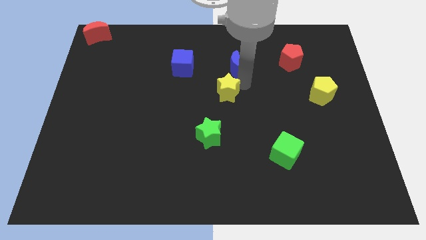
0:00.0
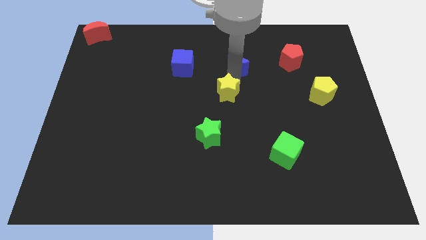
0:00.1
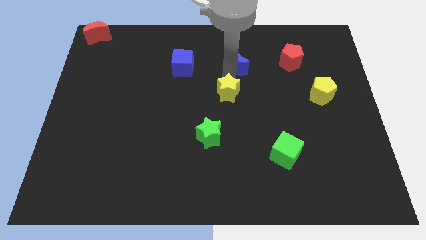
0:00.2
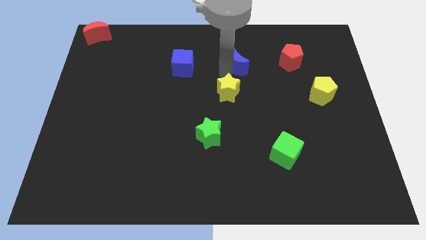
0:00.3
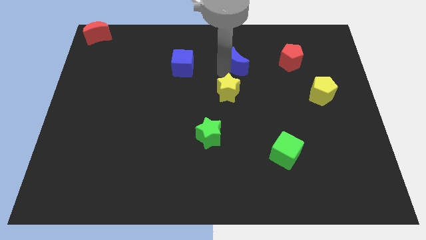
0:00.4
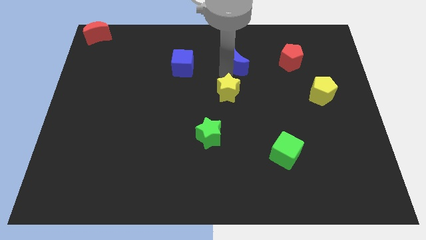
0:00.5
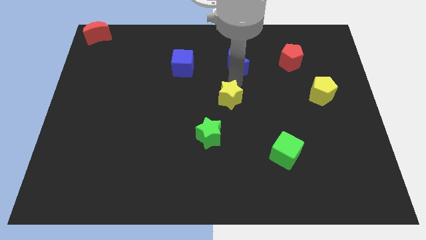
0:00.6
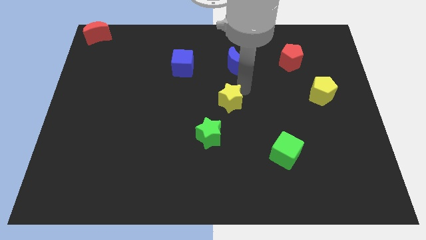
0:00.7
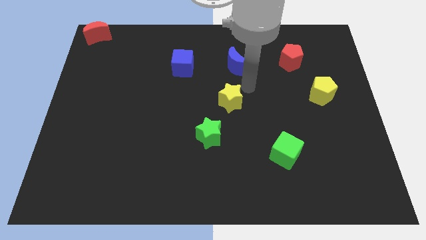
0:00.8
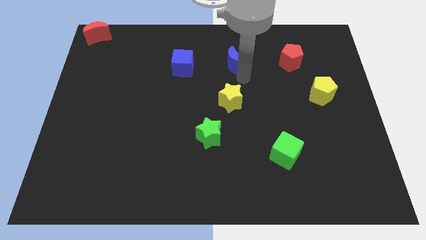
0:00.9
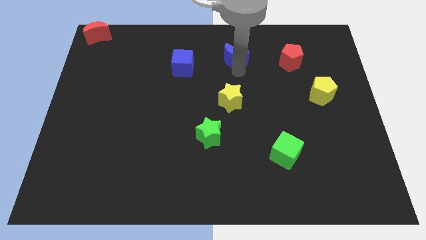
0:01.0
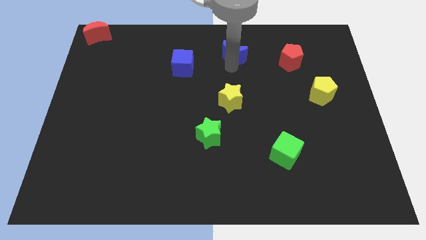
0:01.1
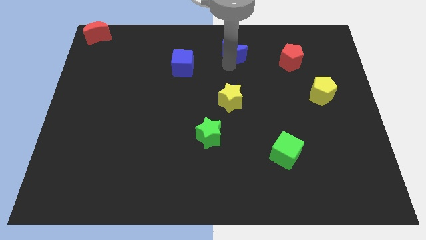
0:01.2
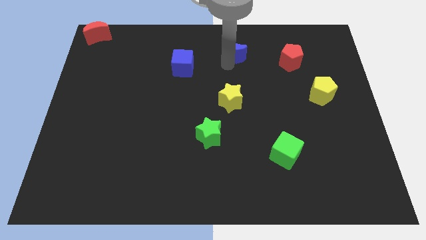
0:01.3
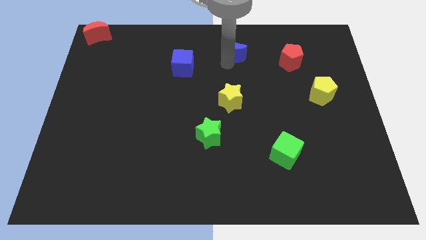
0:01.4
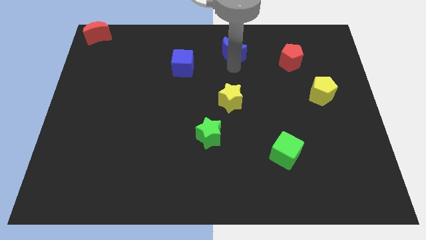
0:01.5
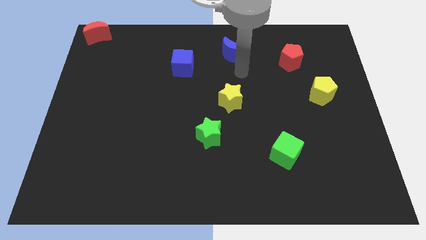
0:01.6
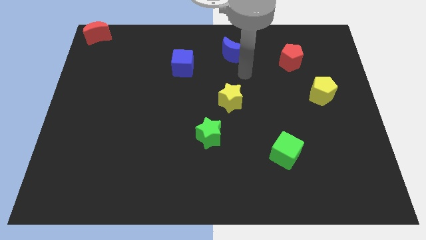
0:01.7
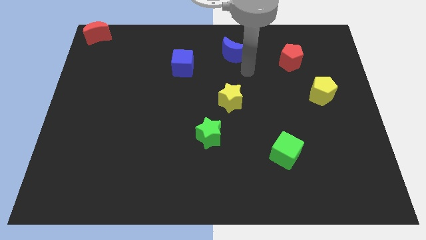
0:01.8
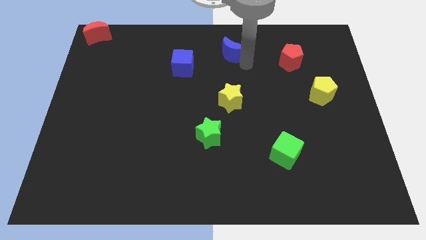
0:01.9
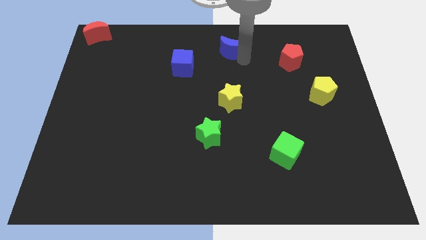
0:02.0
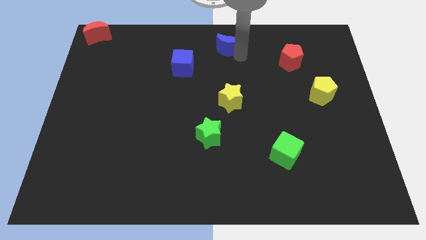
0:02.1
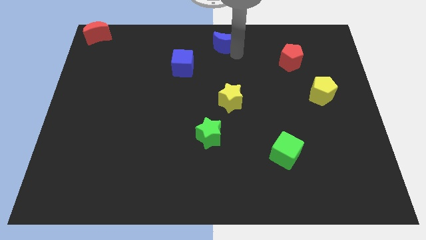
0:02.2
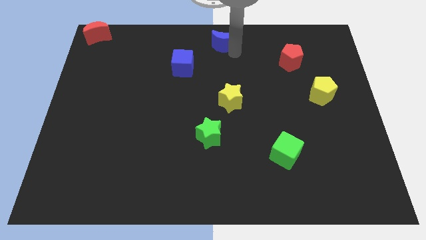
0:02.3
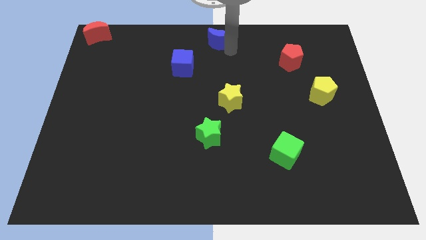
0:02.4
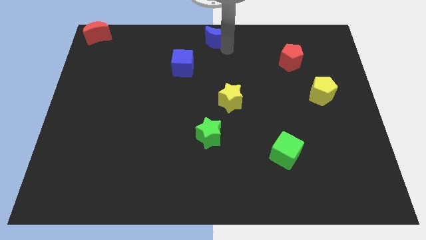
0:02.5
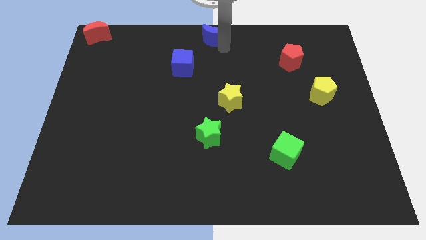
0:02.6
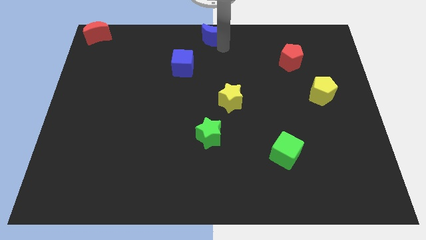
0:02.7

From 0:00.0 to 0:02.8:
push the yellow star and move the blue moon to the top

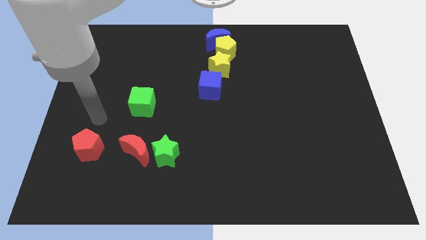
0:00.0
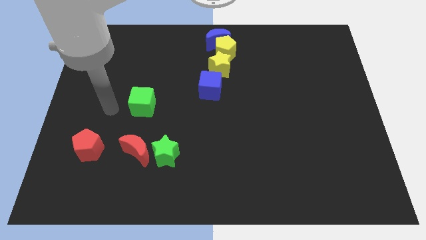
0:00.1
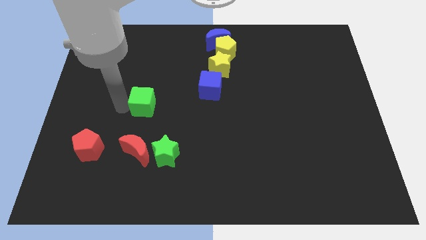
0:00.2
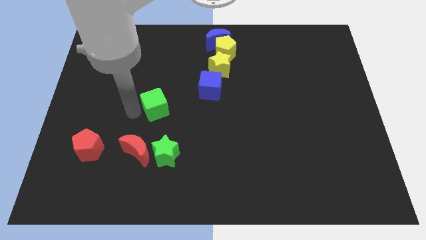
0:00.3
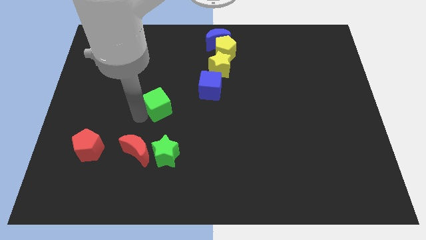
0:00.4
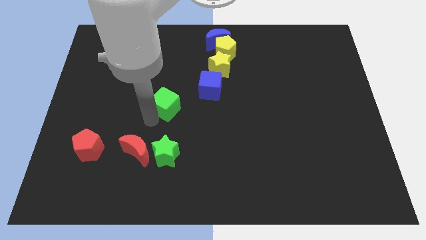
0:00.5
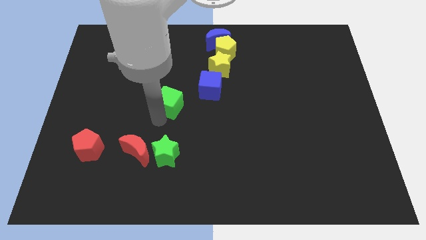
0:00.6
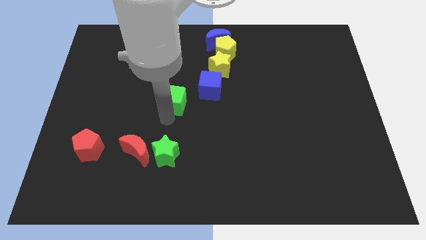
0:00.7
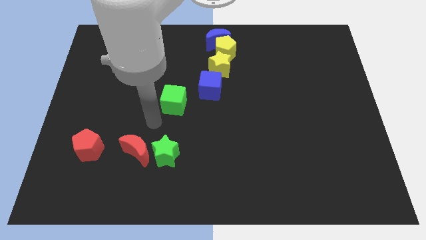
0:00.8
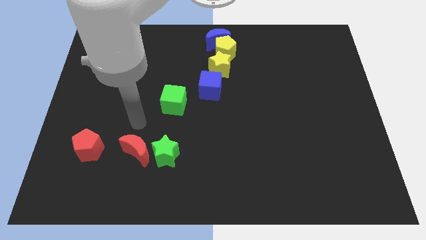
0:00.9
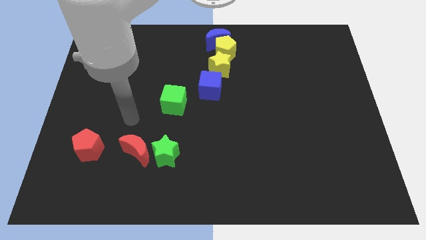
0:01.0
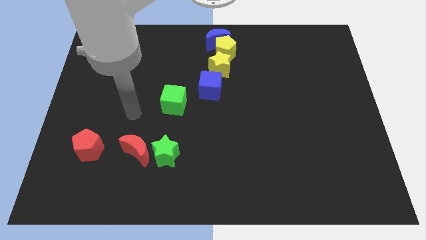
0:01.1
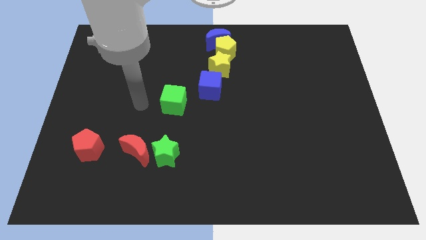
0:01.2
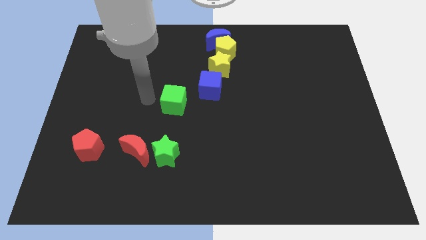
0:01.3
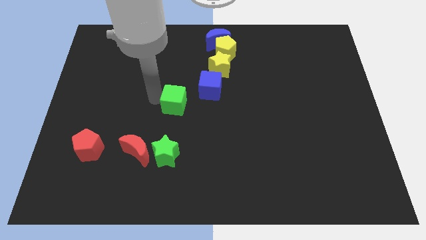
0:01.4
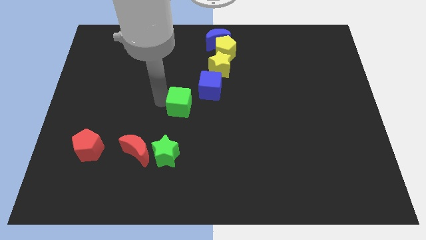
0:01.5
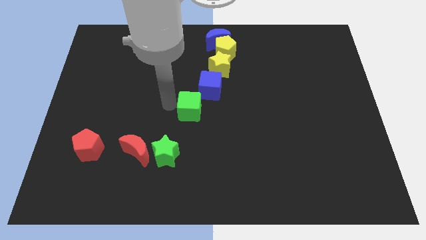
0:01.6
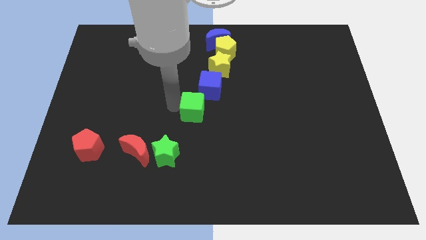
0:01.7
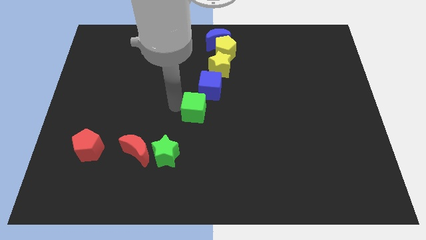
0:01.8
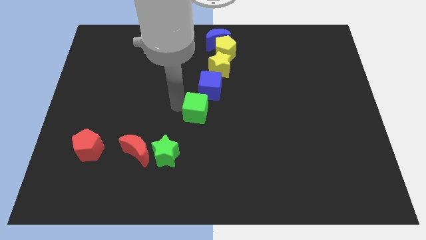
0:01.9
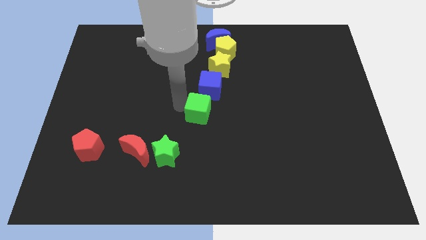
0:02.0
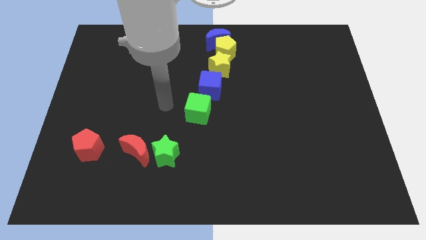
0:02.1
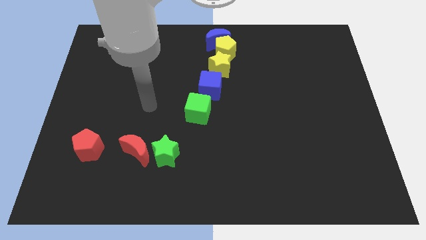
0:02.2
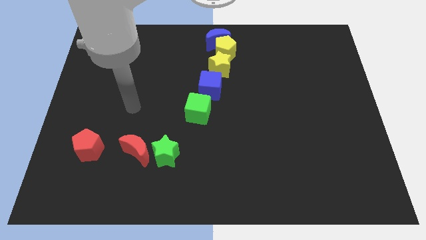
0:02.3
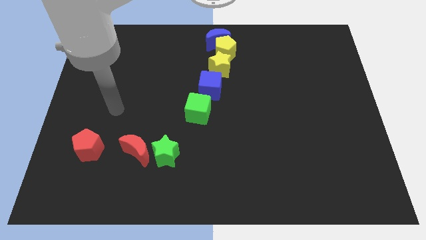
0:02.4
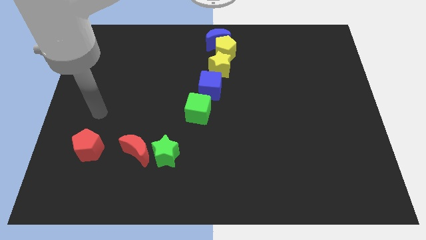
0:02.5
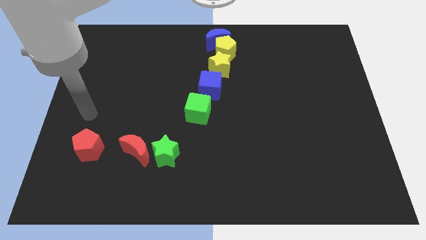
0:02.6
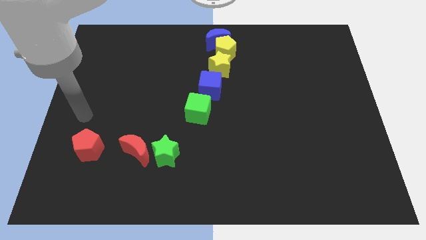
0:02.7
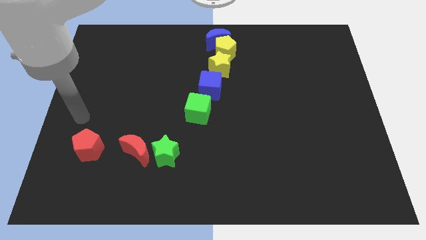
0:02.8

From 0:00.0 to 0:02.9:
place the green cube bottom of the blue cube

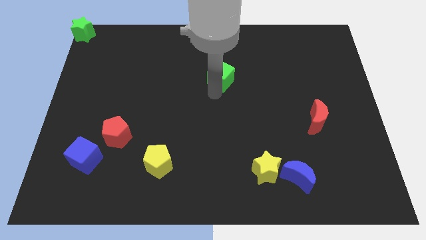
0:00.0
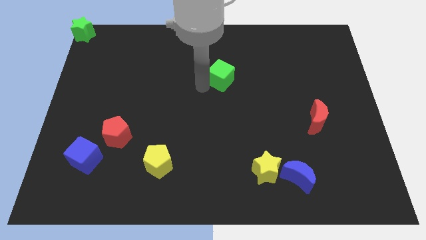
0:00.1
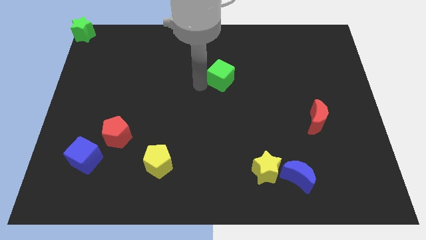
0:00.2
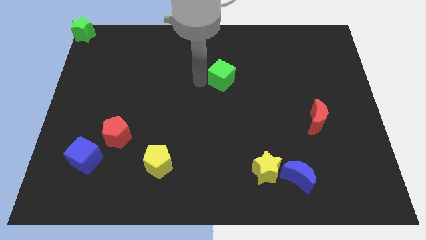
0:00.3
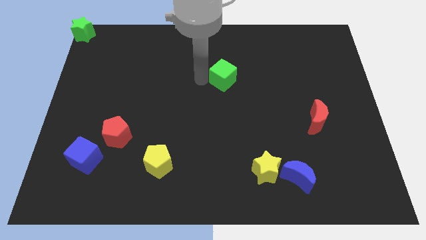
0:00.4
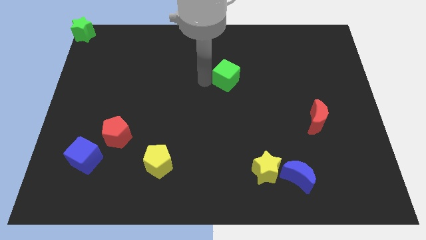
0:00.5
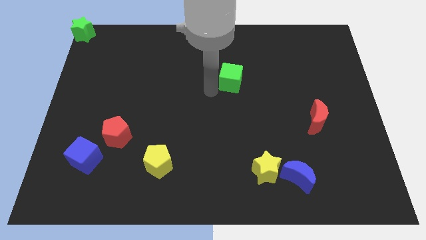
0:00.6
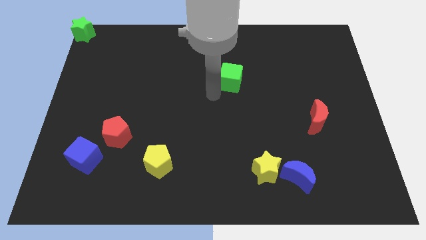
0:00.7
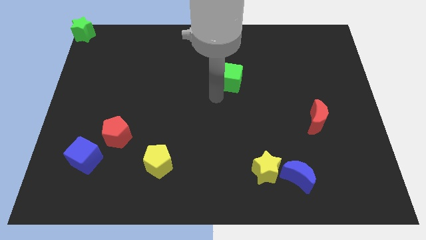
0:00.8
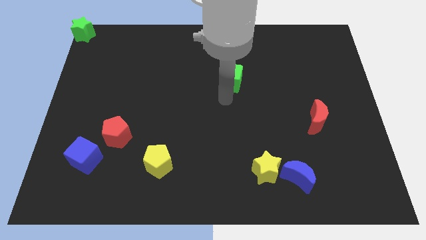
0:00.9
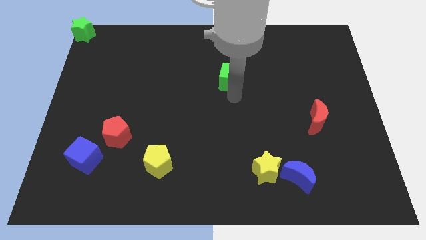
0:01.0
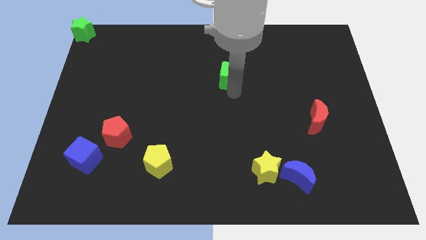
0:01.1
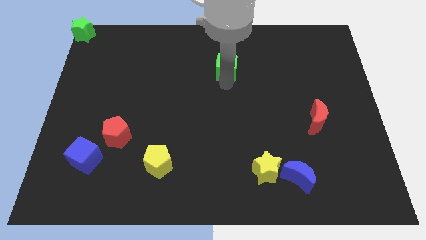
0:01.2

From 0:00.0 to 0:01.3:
move green cube slightly upwards

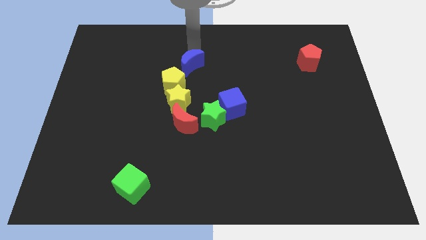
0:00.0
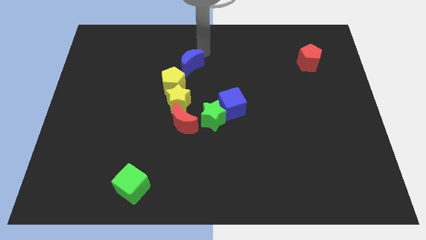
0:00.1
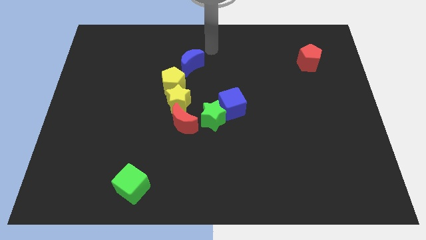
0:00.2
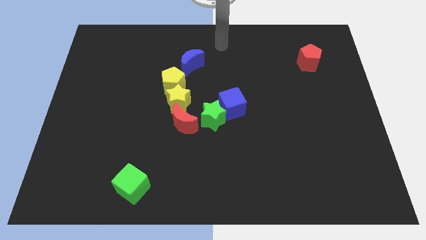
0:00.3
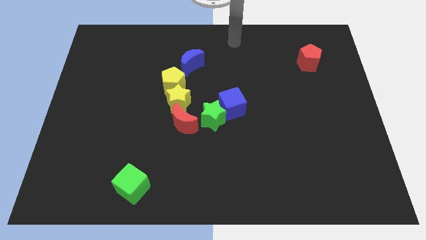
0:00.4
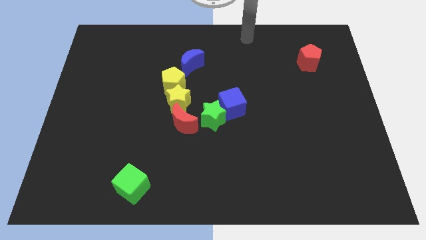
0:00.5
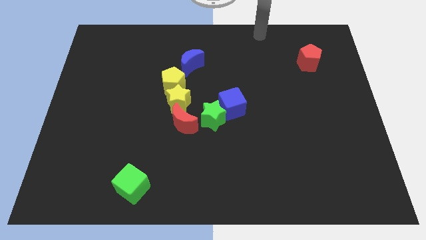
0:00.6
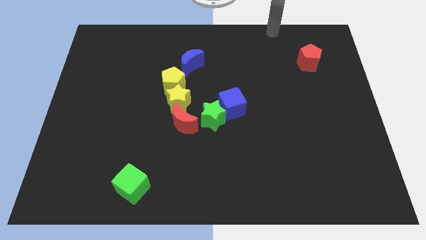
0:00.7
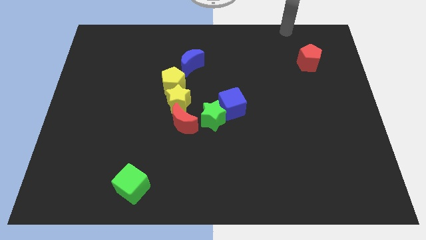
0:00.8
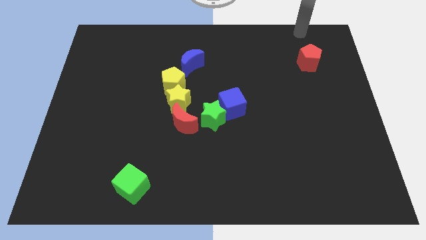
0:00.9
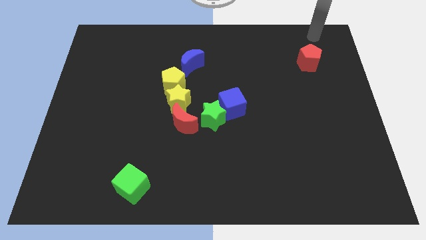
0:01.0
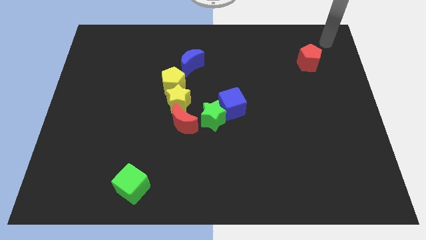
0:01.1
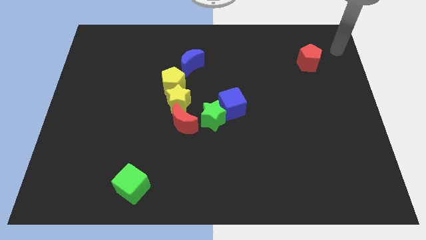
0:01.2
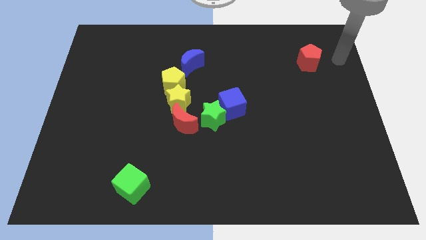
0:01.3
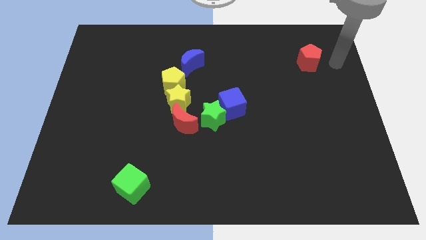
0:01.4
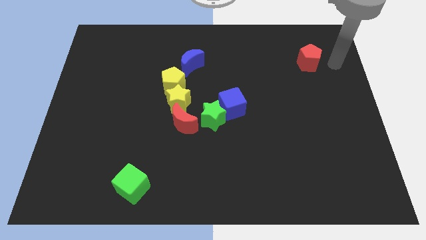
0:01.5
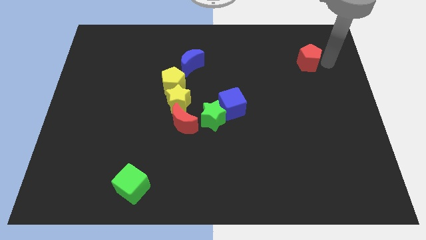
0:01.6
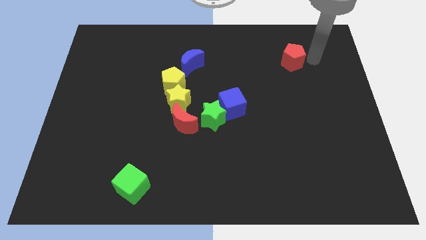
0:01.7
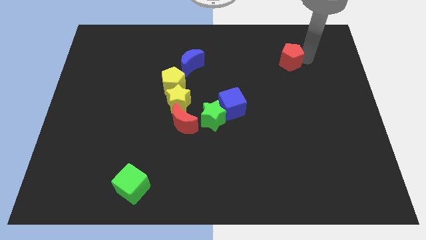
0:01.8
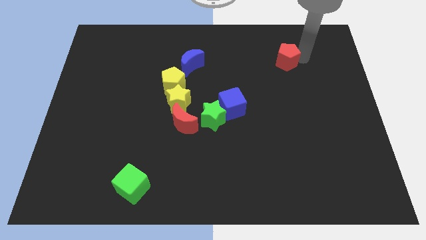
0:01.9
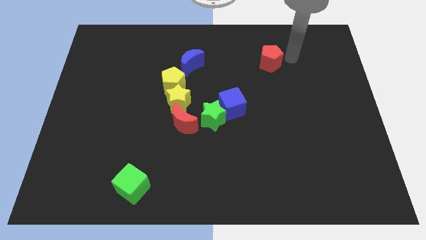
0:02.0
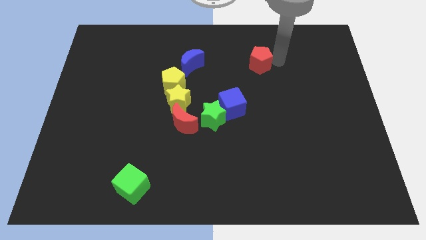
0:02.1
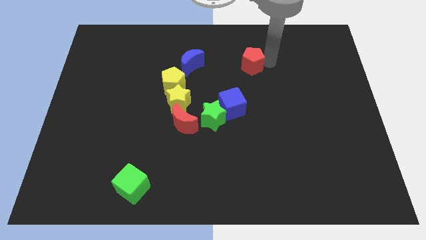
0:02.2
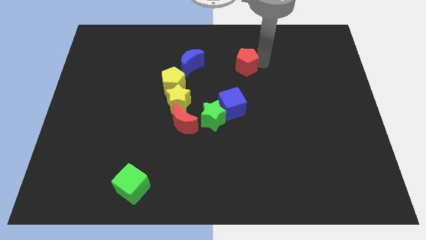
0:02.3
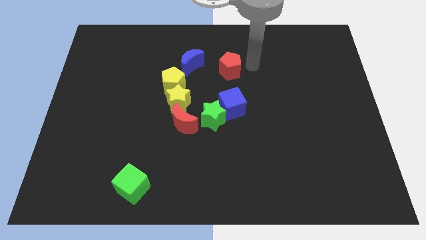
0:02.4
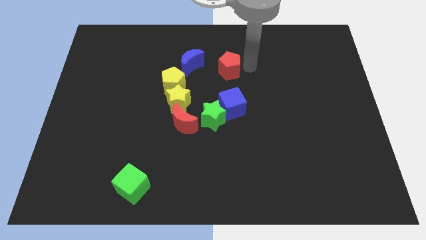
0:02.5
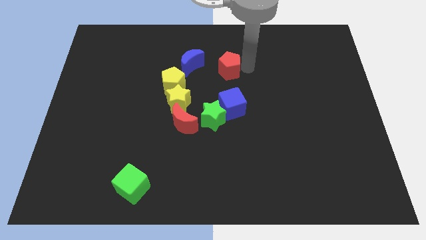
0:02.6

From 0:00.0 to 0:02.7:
place red pentagon to the top of blue cube
